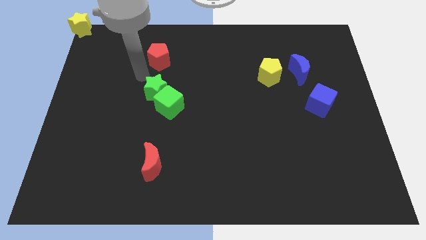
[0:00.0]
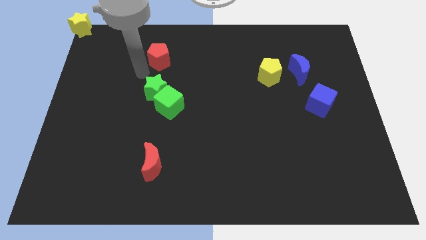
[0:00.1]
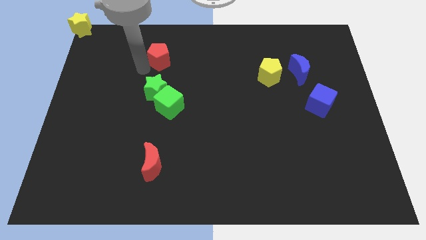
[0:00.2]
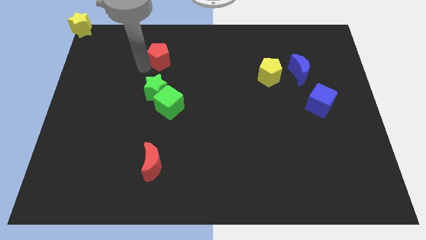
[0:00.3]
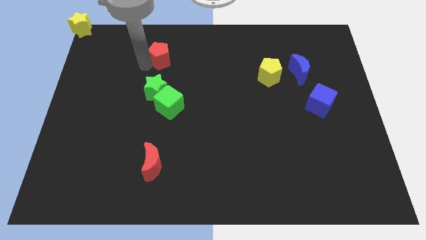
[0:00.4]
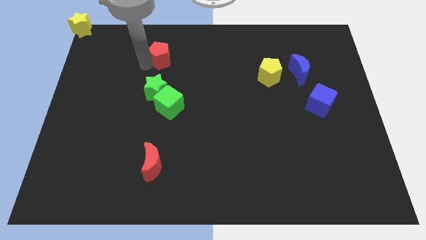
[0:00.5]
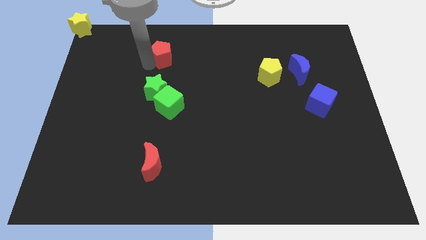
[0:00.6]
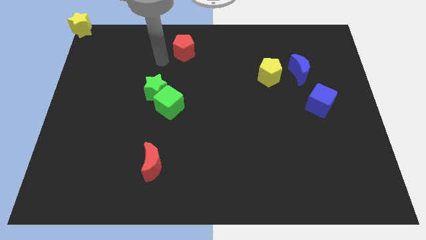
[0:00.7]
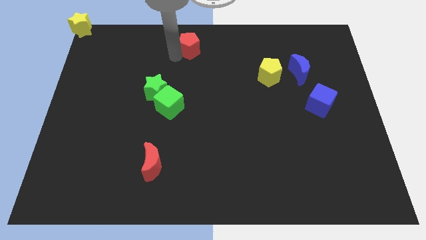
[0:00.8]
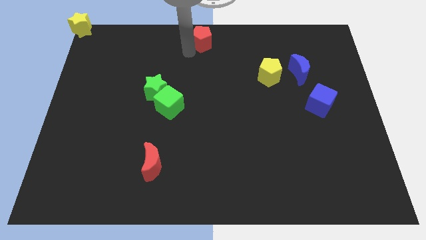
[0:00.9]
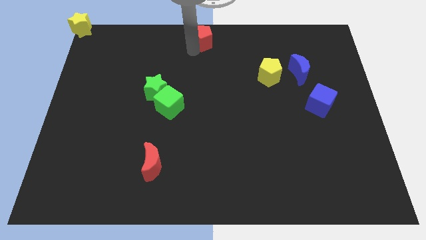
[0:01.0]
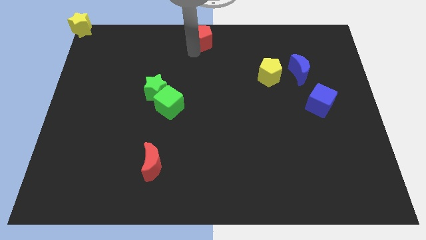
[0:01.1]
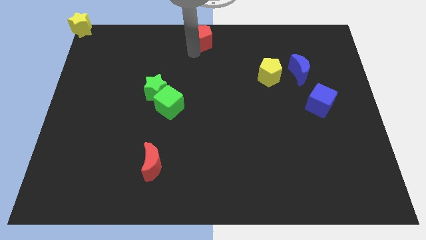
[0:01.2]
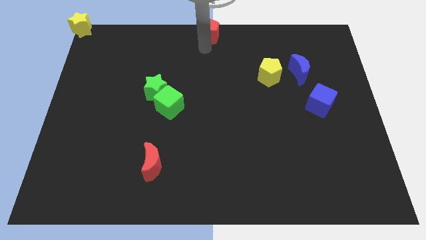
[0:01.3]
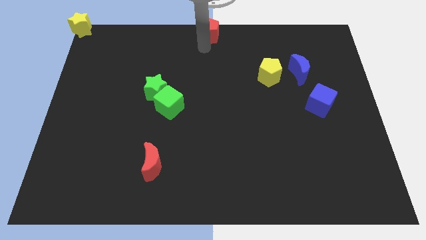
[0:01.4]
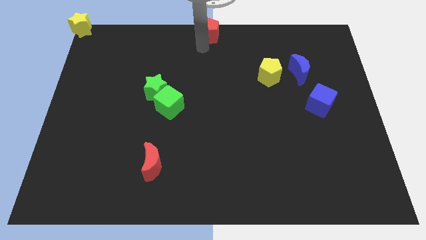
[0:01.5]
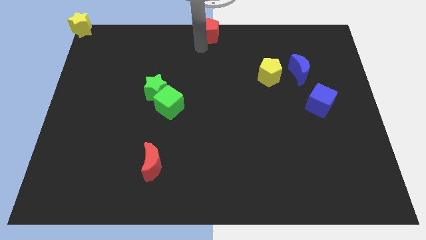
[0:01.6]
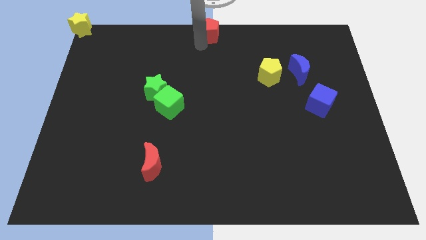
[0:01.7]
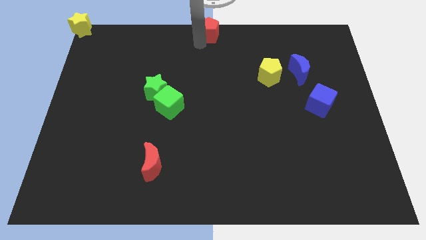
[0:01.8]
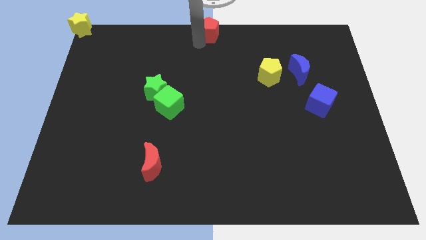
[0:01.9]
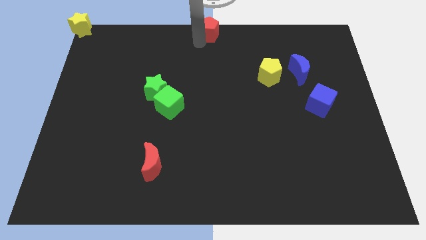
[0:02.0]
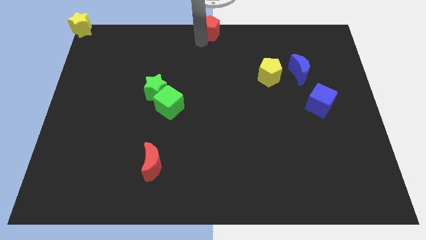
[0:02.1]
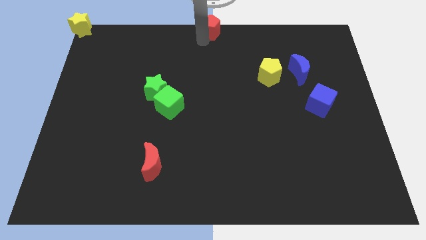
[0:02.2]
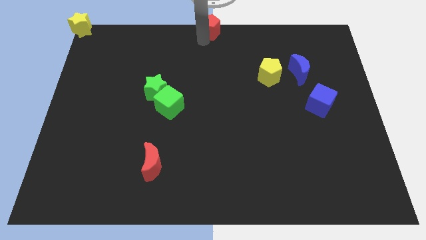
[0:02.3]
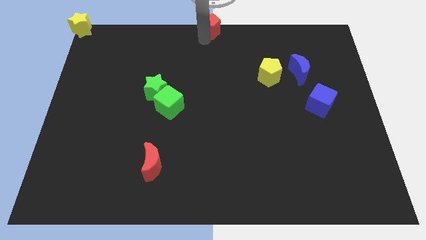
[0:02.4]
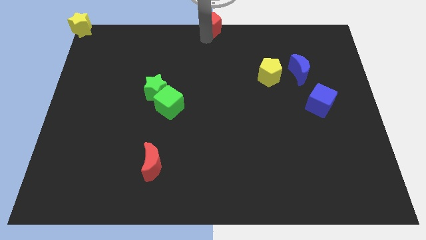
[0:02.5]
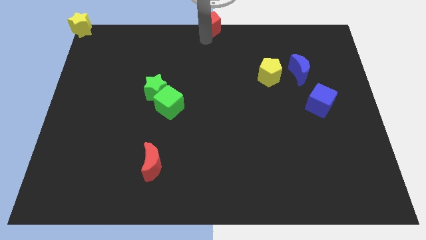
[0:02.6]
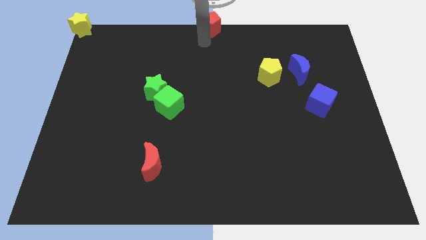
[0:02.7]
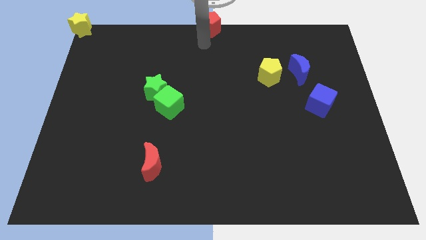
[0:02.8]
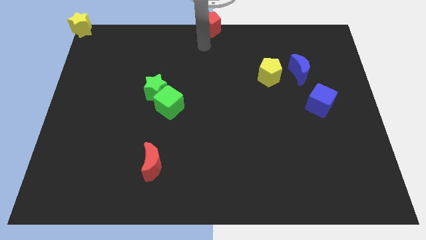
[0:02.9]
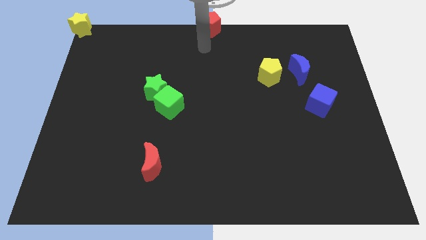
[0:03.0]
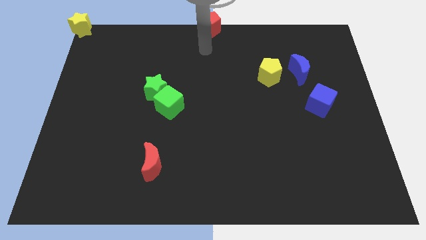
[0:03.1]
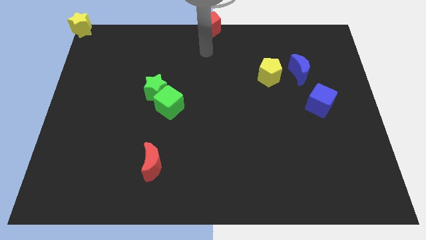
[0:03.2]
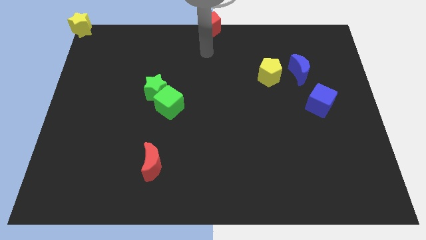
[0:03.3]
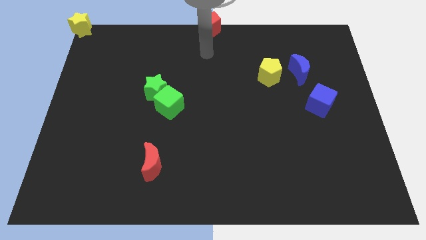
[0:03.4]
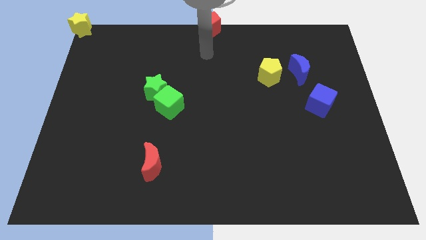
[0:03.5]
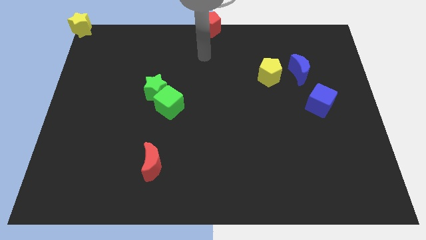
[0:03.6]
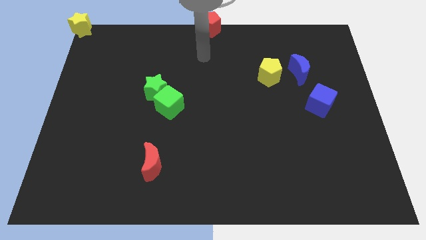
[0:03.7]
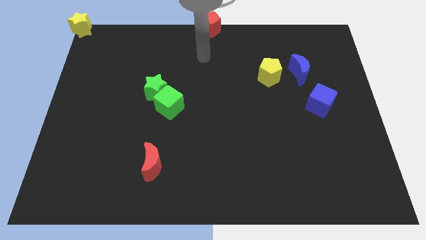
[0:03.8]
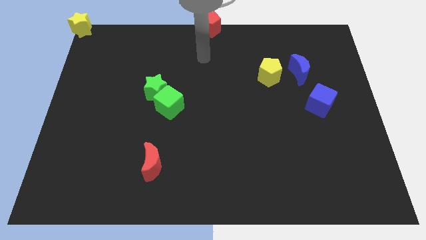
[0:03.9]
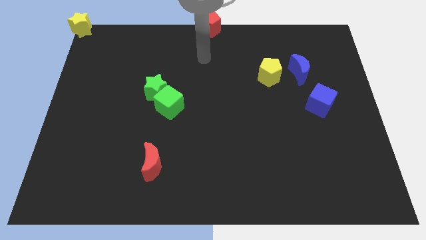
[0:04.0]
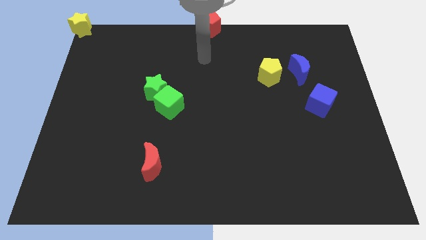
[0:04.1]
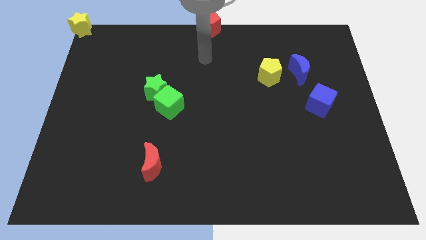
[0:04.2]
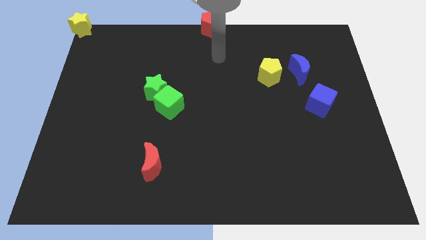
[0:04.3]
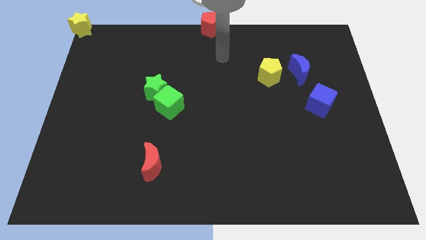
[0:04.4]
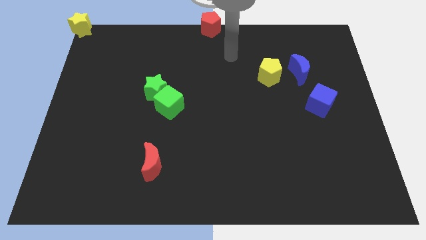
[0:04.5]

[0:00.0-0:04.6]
push the red pentagon to the top center

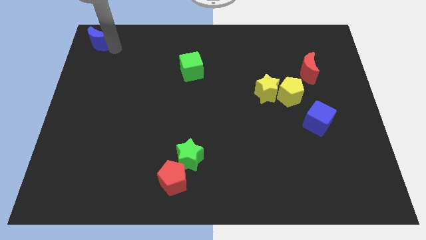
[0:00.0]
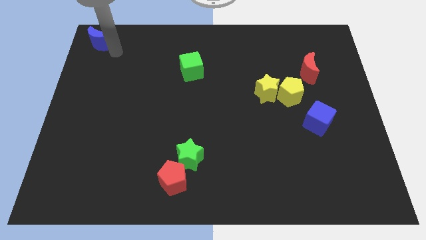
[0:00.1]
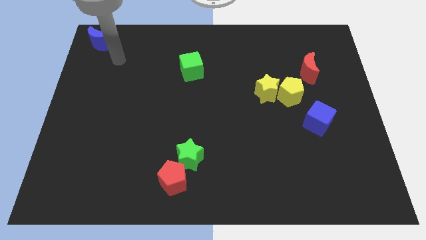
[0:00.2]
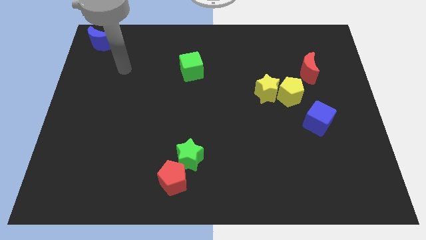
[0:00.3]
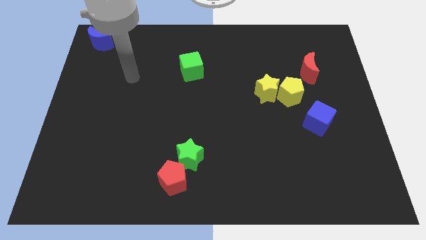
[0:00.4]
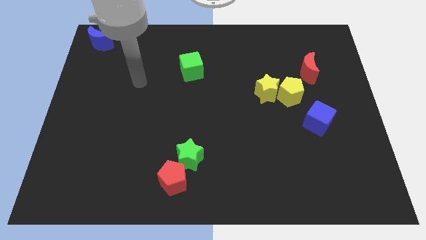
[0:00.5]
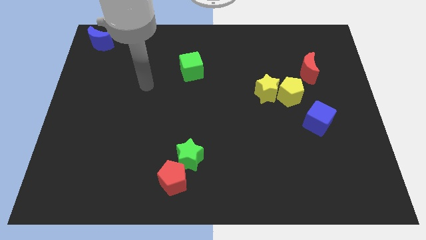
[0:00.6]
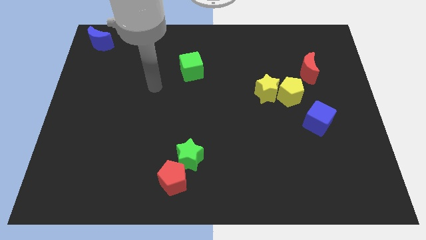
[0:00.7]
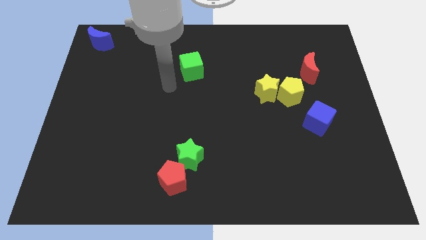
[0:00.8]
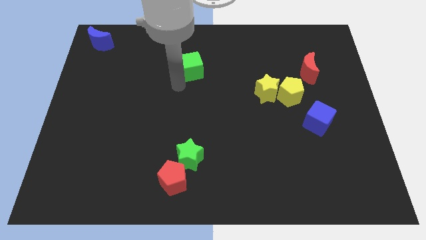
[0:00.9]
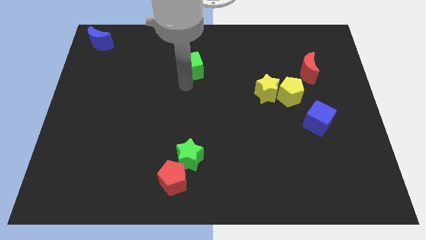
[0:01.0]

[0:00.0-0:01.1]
move your arm towards the green cube

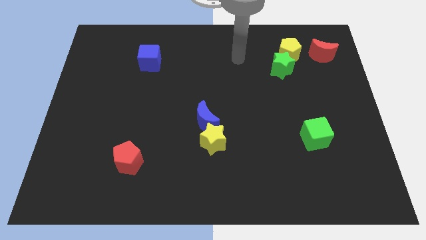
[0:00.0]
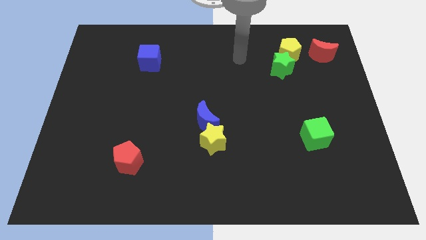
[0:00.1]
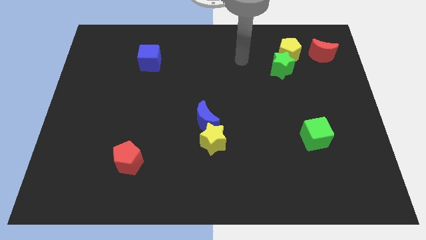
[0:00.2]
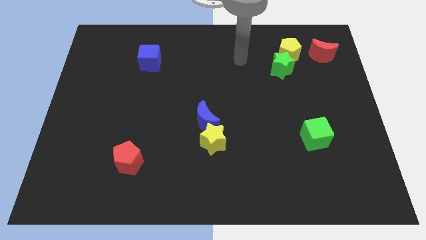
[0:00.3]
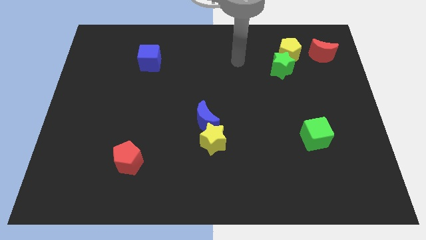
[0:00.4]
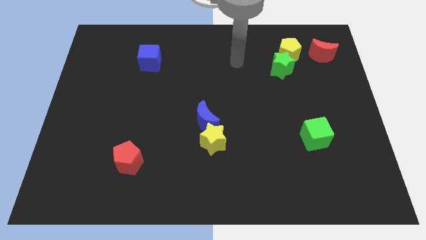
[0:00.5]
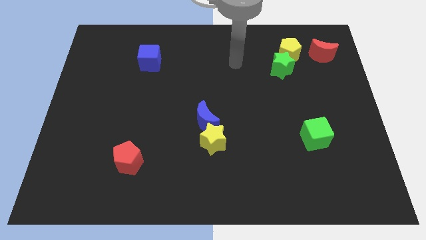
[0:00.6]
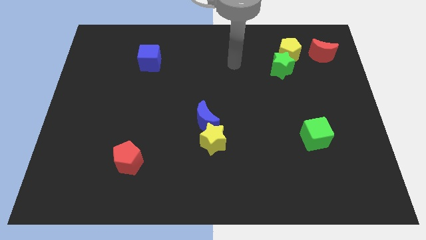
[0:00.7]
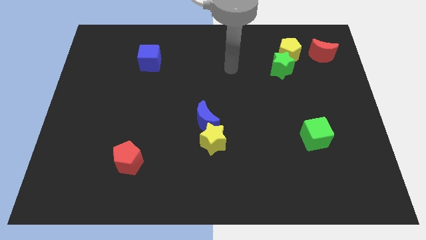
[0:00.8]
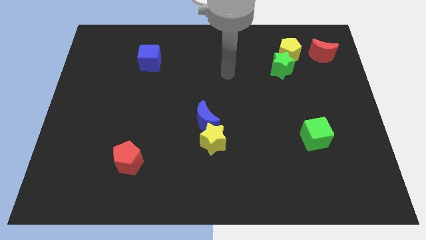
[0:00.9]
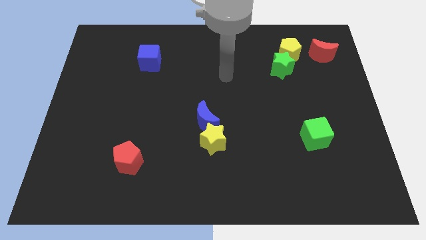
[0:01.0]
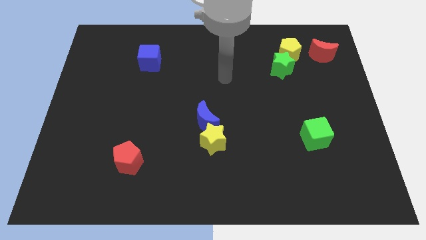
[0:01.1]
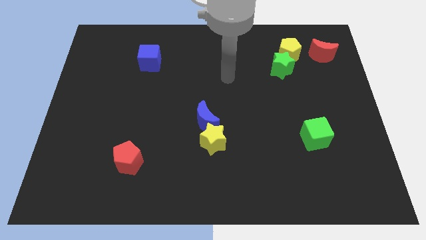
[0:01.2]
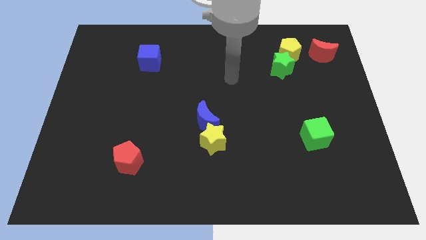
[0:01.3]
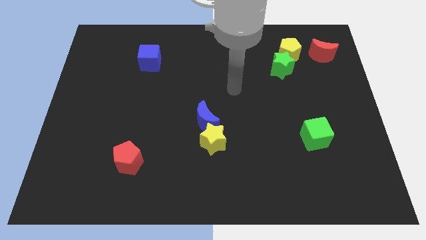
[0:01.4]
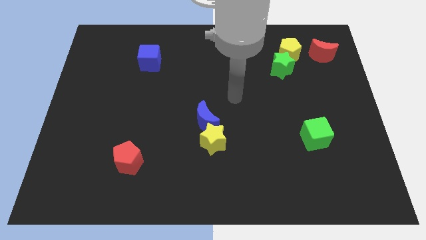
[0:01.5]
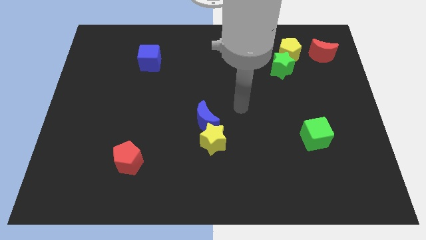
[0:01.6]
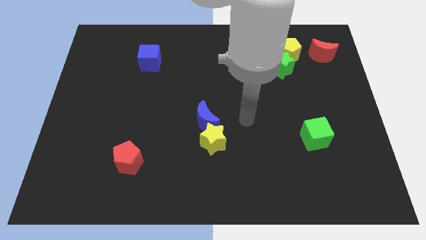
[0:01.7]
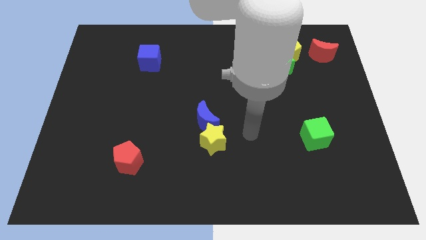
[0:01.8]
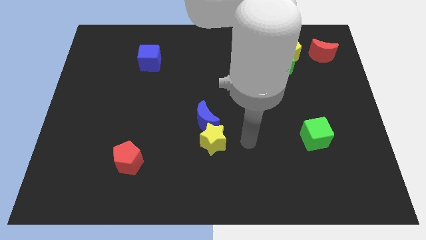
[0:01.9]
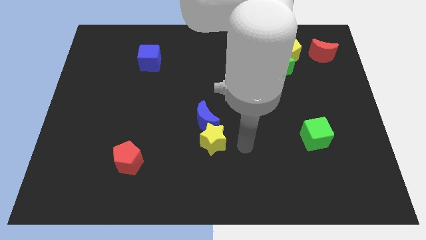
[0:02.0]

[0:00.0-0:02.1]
place your arm to the right of yellow star

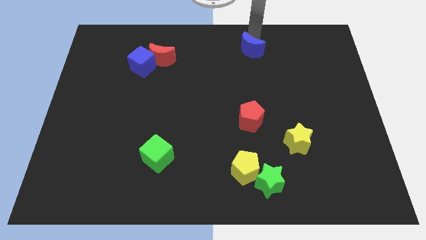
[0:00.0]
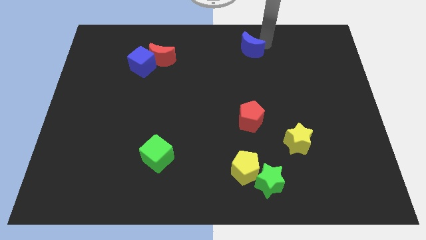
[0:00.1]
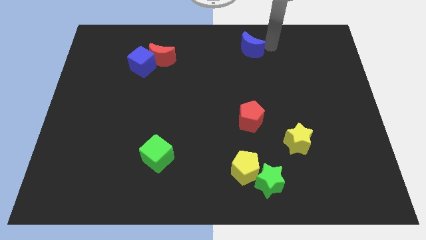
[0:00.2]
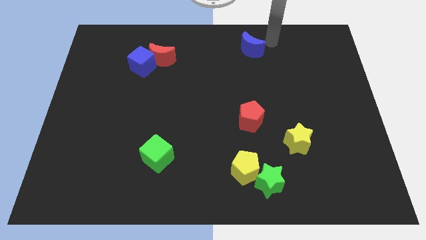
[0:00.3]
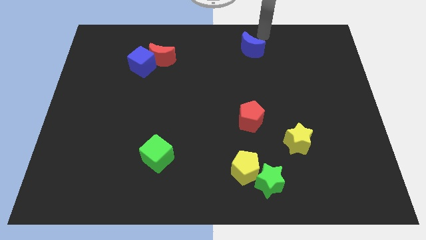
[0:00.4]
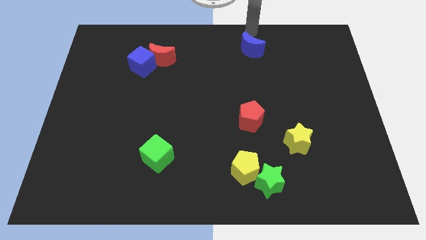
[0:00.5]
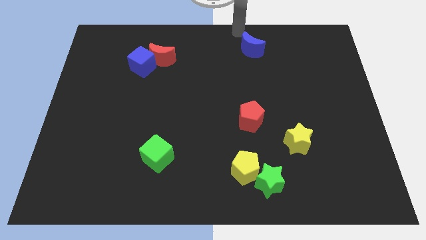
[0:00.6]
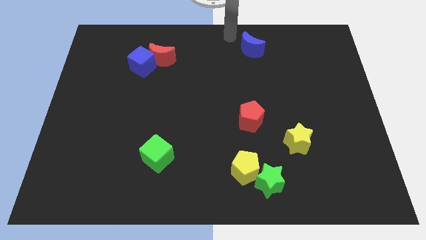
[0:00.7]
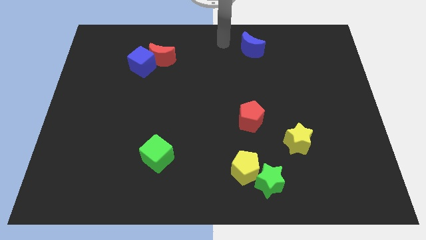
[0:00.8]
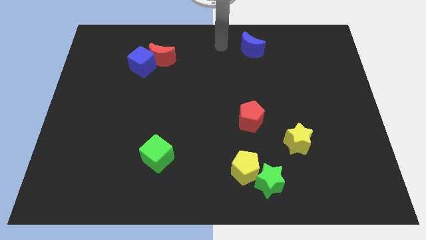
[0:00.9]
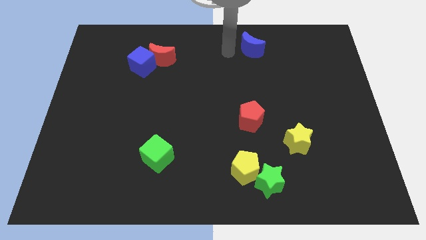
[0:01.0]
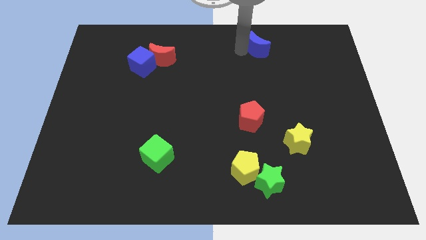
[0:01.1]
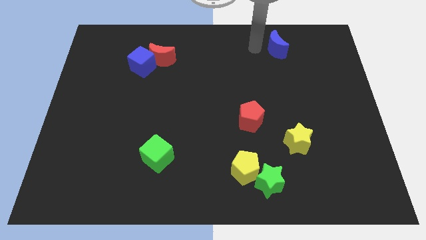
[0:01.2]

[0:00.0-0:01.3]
push the blue crescent slightly towards the top right side
